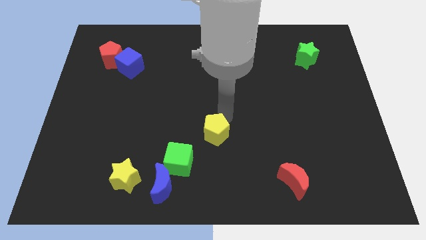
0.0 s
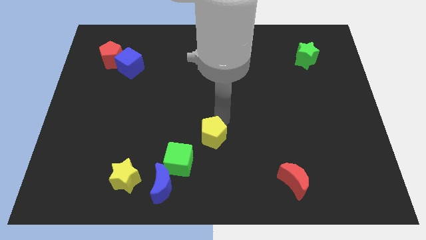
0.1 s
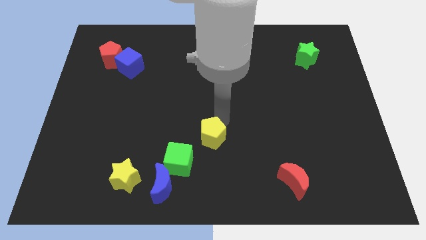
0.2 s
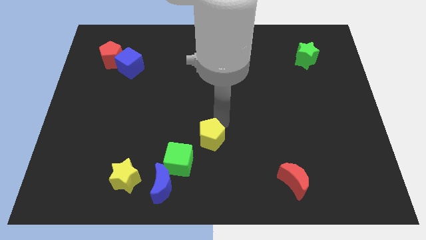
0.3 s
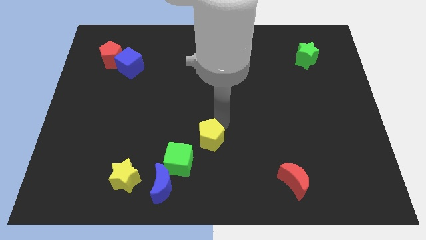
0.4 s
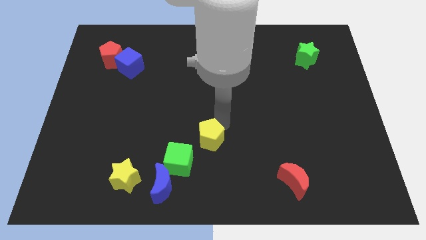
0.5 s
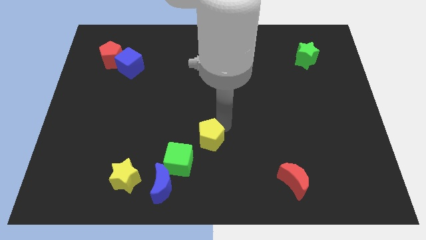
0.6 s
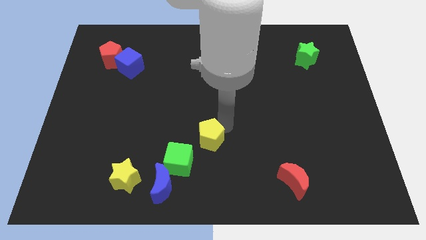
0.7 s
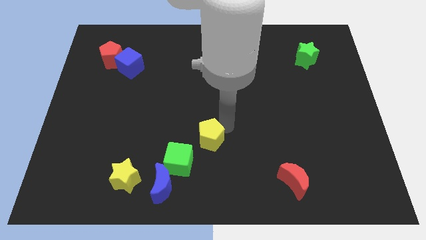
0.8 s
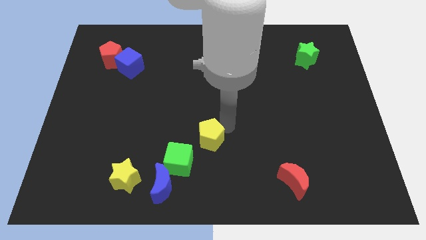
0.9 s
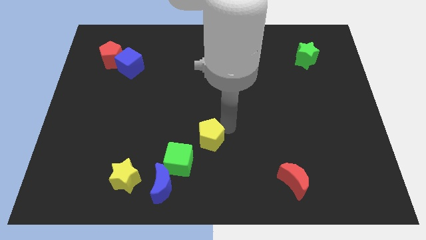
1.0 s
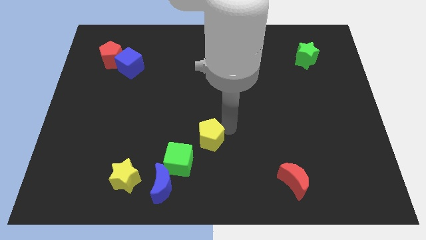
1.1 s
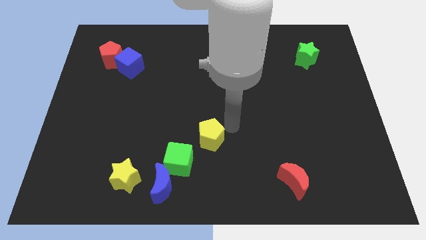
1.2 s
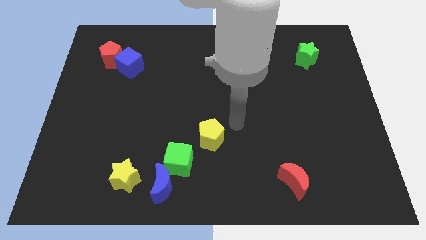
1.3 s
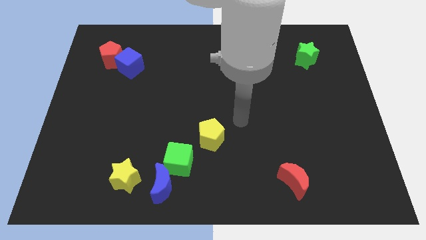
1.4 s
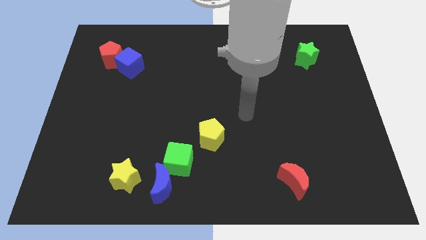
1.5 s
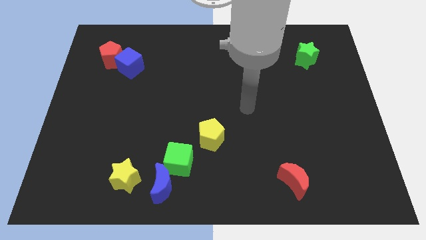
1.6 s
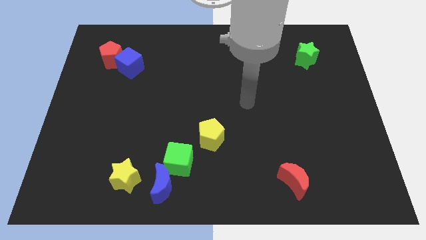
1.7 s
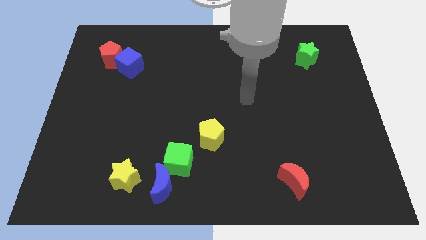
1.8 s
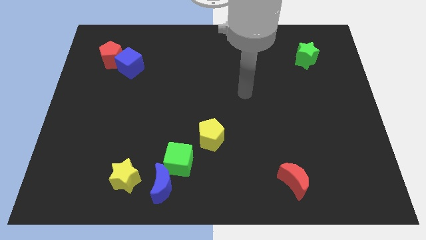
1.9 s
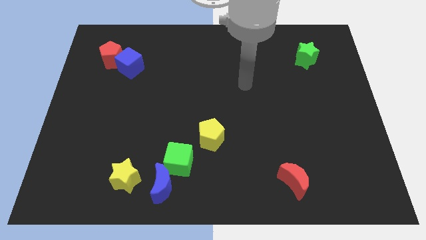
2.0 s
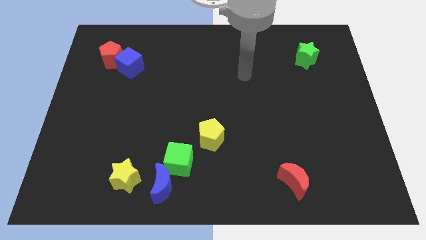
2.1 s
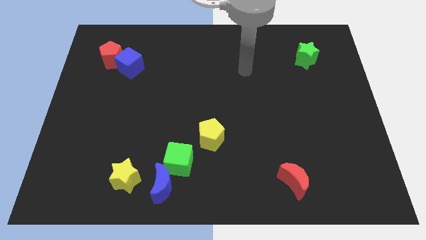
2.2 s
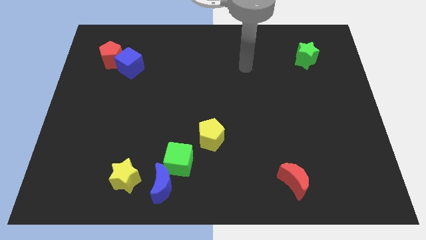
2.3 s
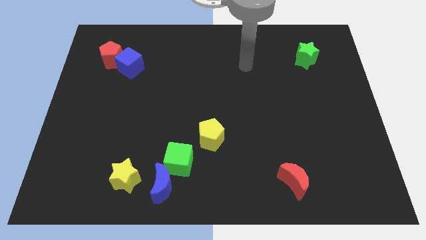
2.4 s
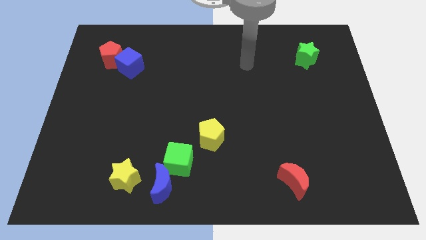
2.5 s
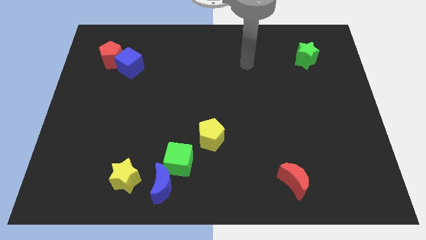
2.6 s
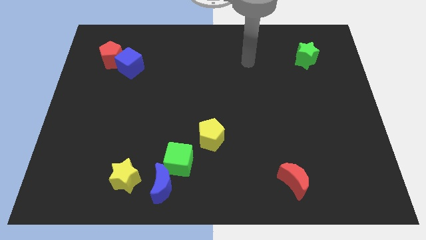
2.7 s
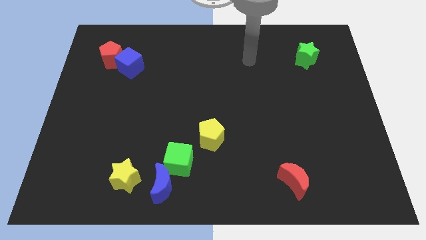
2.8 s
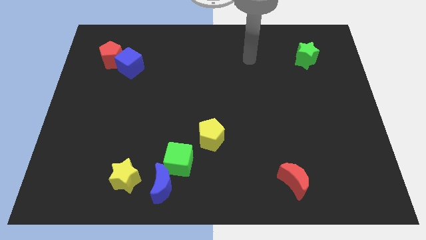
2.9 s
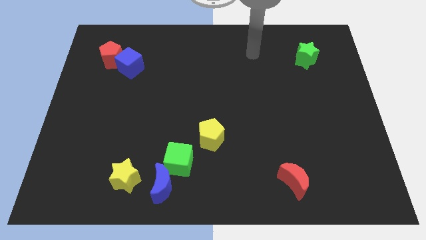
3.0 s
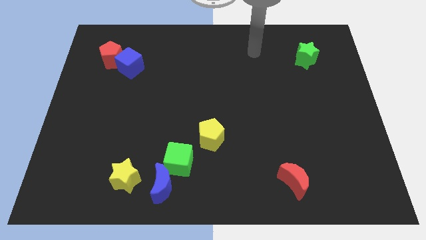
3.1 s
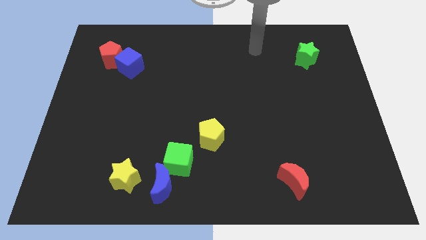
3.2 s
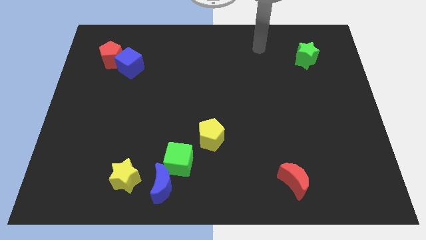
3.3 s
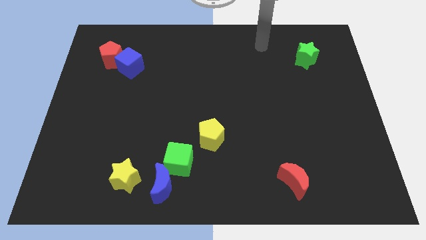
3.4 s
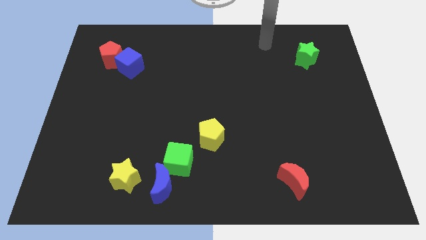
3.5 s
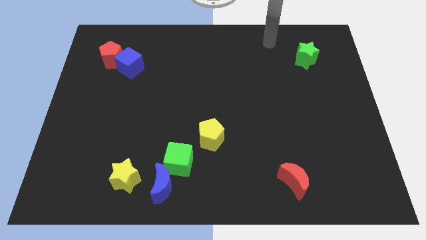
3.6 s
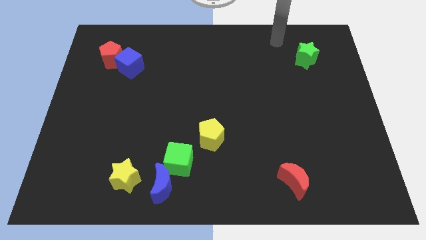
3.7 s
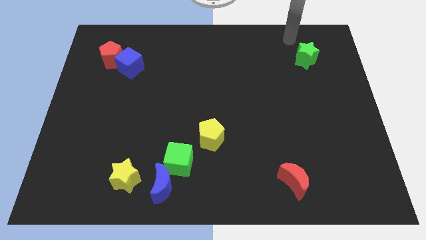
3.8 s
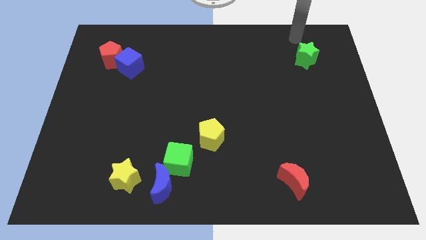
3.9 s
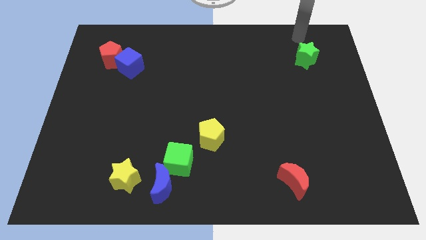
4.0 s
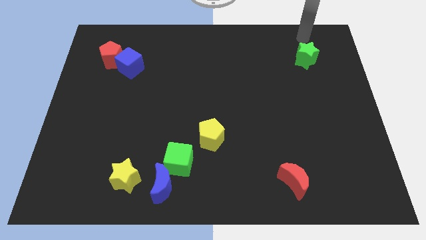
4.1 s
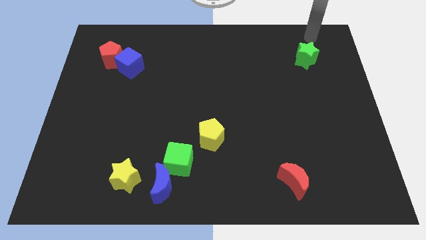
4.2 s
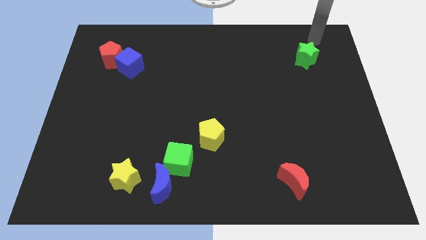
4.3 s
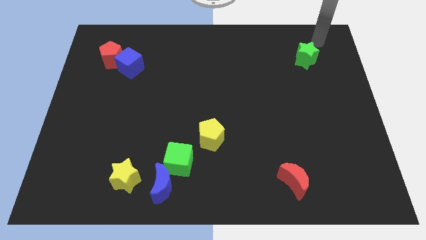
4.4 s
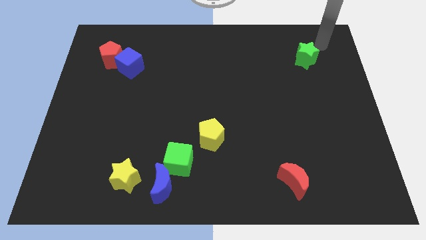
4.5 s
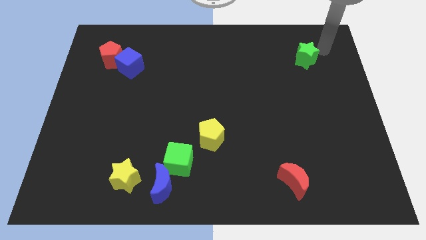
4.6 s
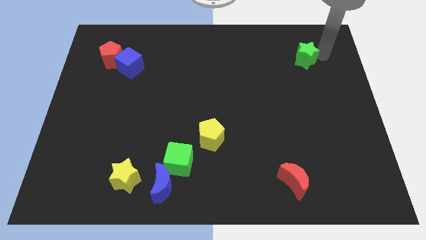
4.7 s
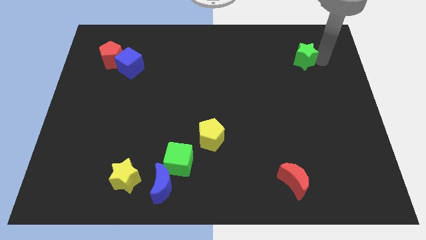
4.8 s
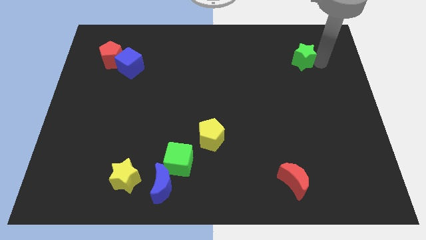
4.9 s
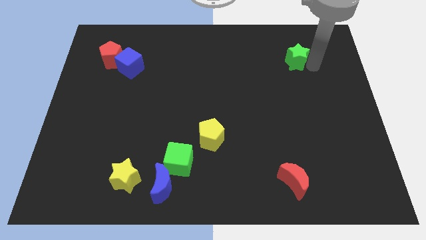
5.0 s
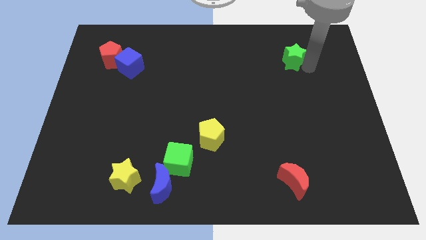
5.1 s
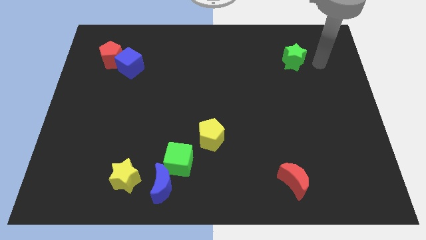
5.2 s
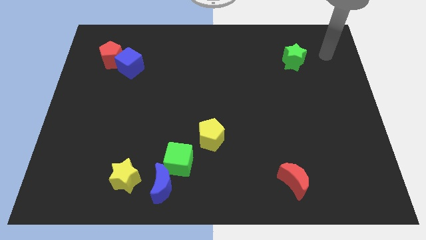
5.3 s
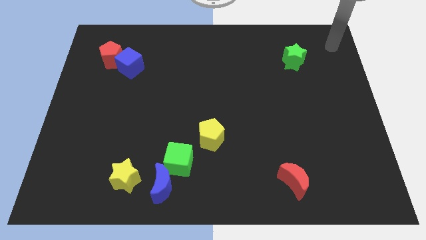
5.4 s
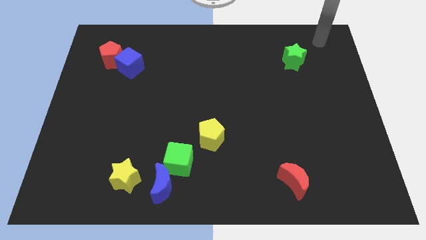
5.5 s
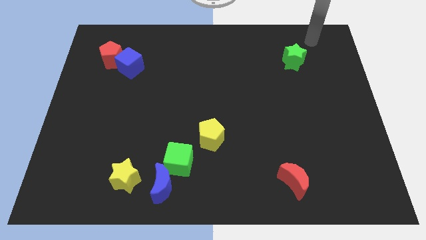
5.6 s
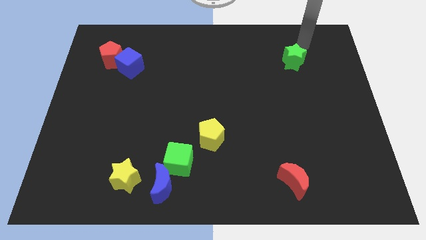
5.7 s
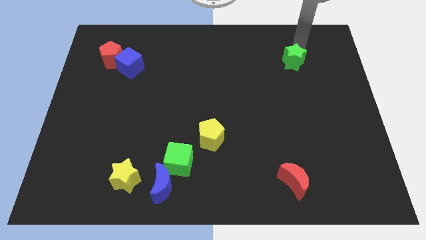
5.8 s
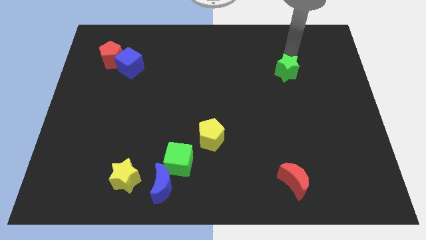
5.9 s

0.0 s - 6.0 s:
place the green star vertically above the red crescent

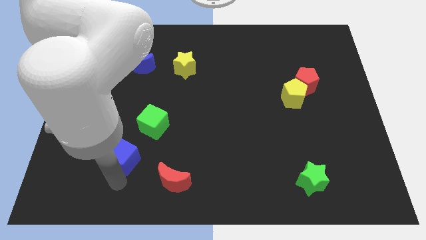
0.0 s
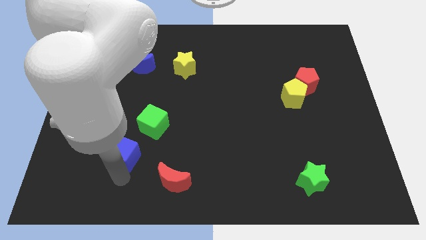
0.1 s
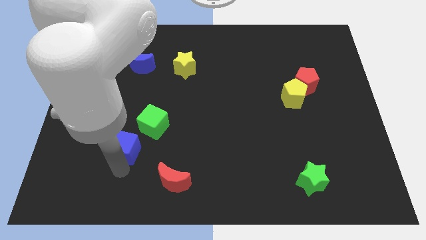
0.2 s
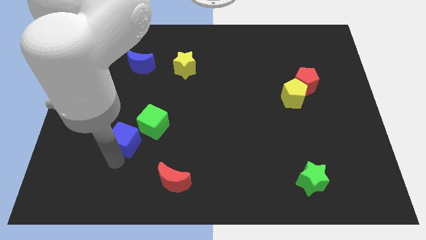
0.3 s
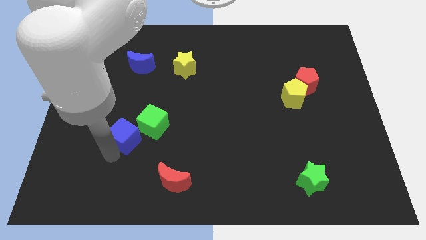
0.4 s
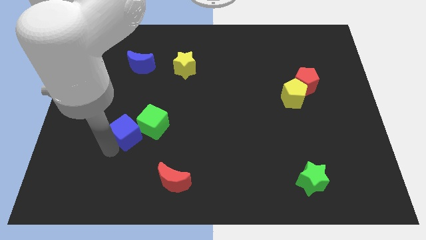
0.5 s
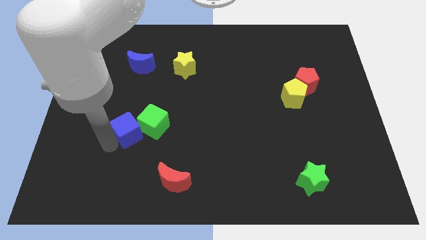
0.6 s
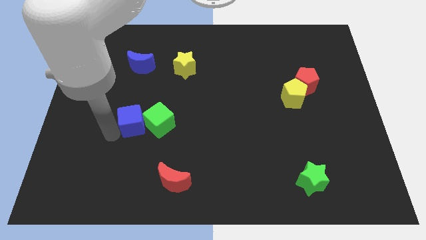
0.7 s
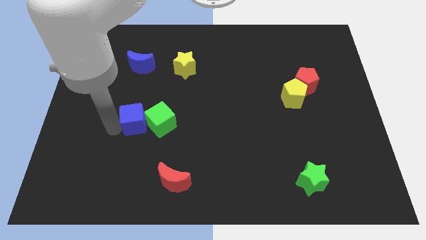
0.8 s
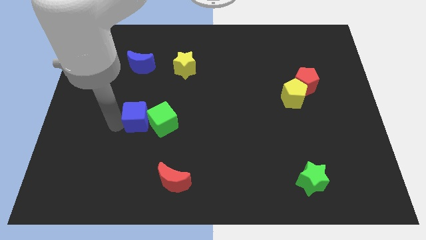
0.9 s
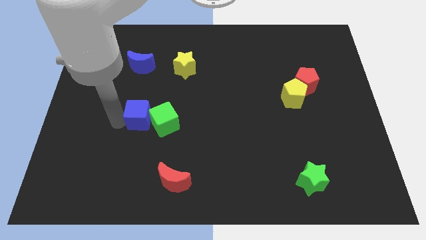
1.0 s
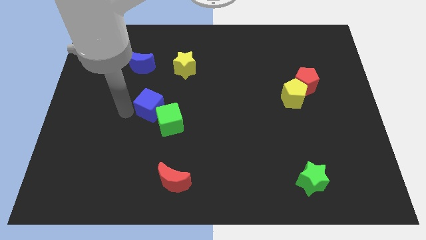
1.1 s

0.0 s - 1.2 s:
move blue cube into the green cube

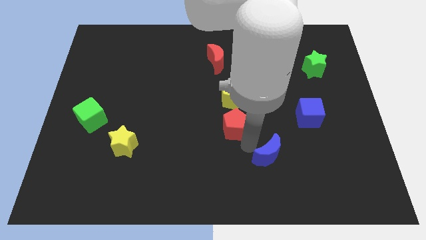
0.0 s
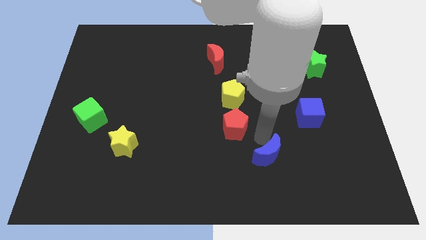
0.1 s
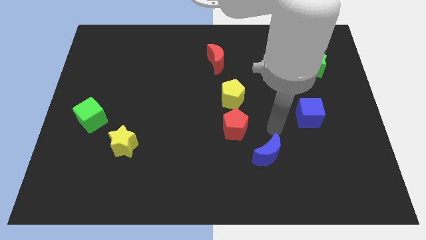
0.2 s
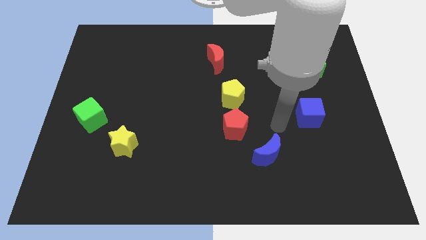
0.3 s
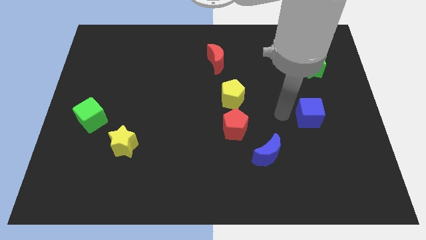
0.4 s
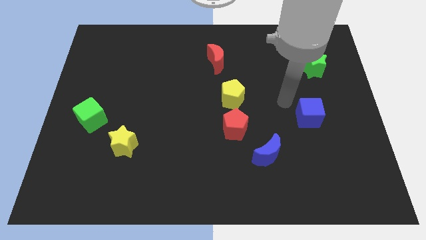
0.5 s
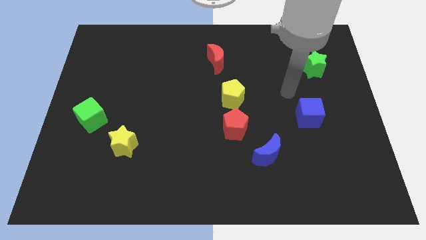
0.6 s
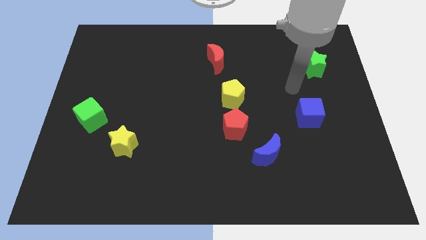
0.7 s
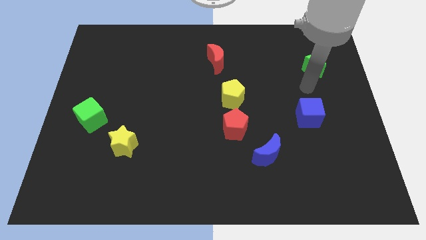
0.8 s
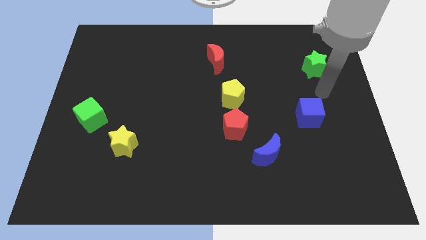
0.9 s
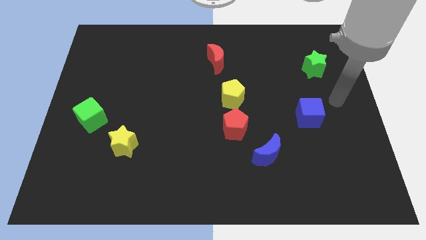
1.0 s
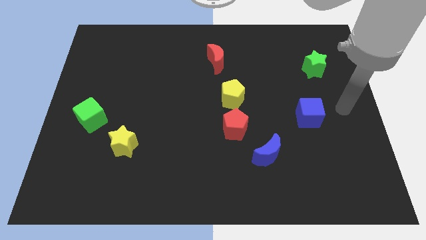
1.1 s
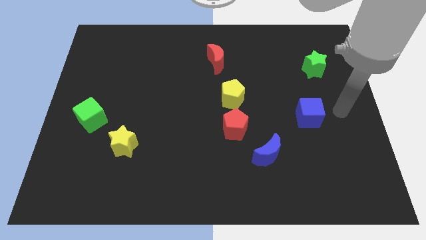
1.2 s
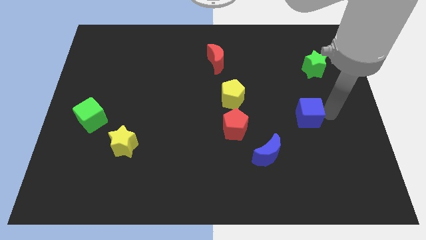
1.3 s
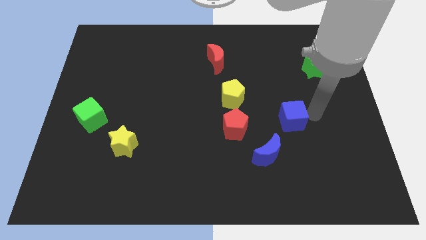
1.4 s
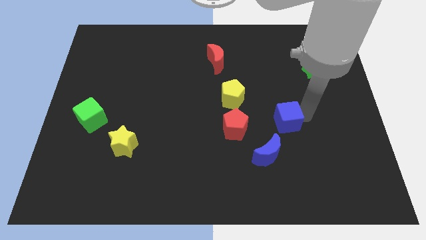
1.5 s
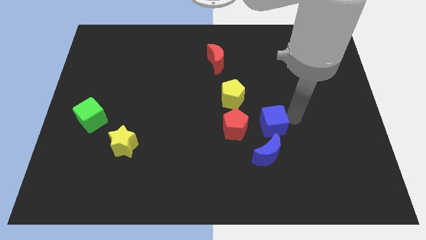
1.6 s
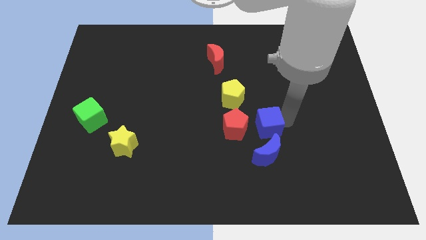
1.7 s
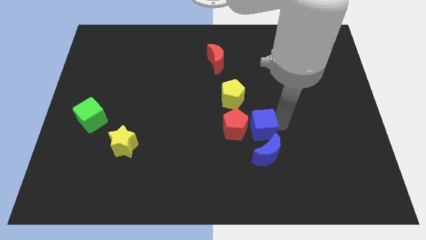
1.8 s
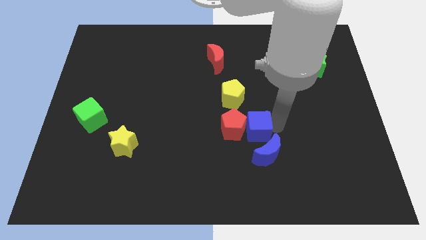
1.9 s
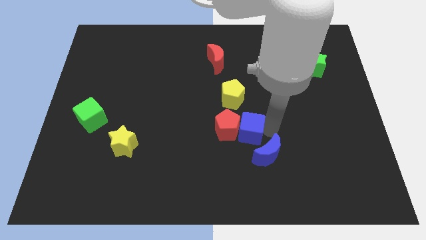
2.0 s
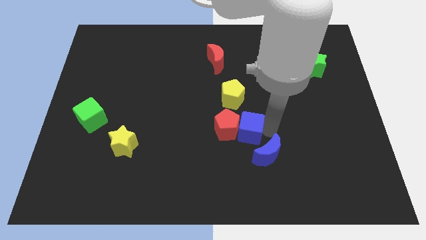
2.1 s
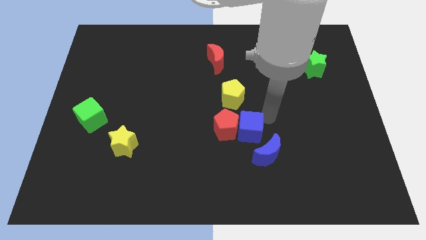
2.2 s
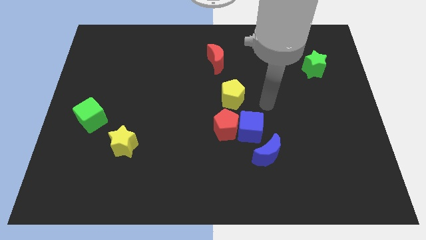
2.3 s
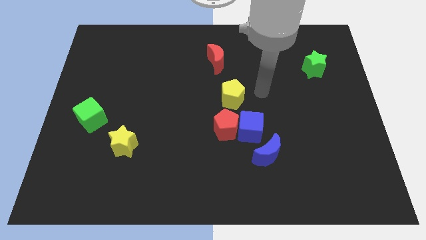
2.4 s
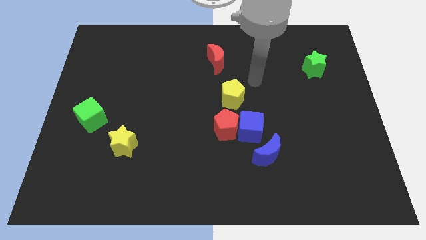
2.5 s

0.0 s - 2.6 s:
push the blue cube into red pentagon
